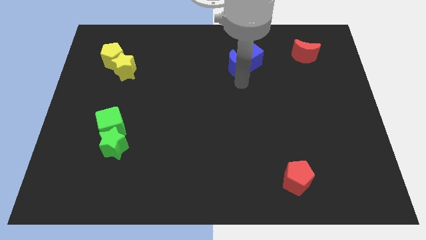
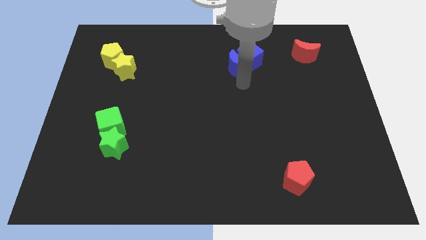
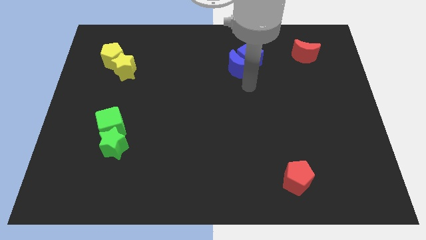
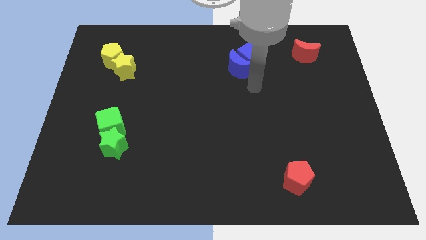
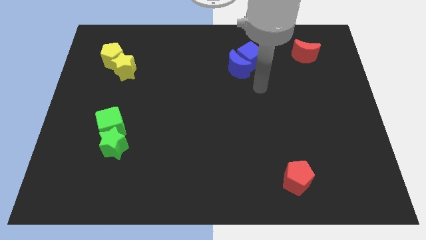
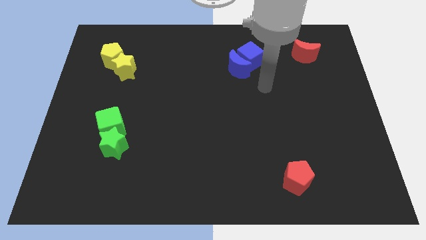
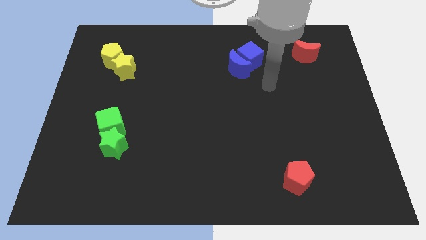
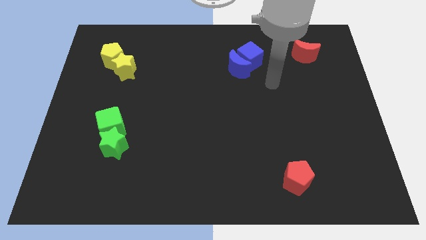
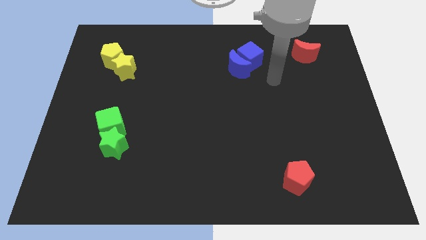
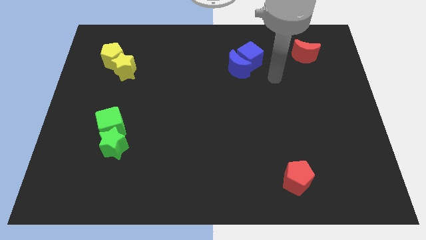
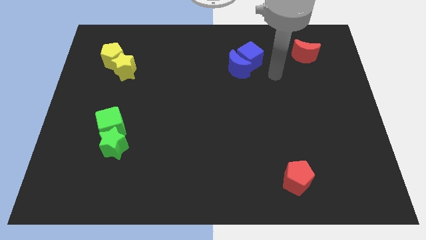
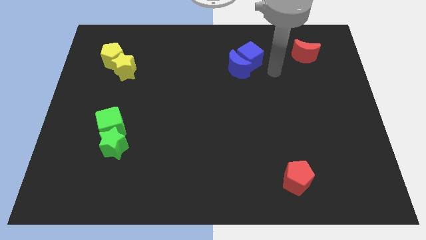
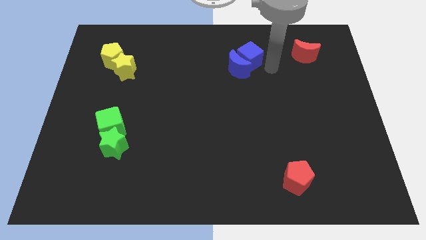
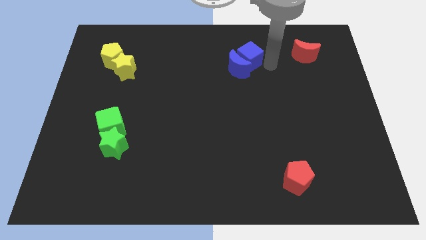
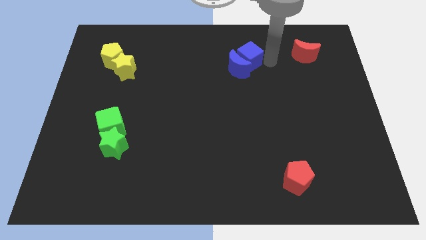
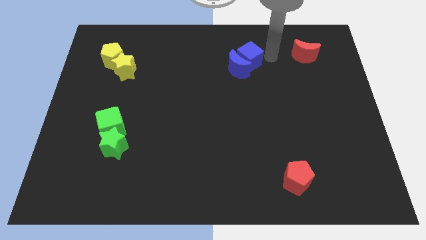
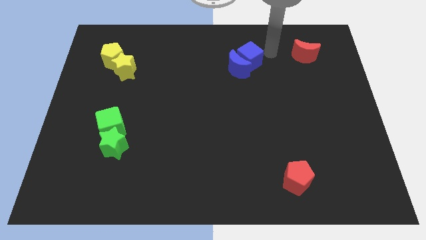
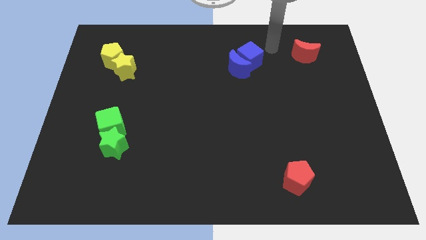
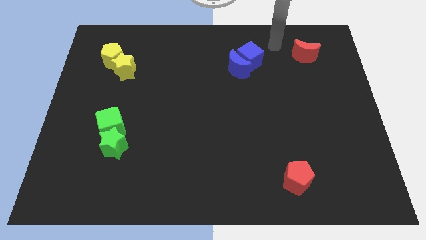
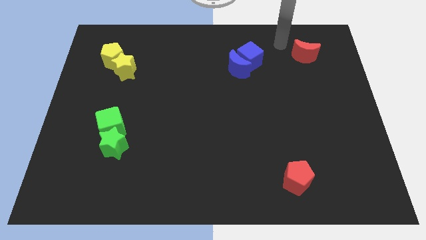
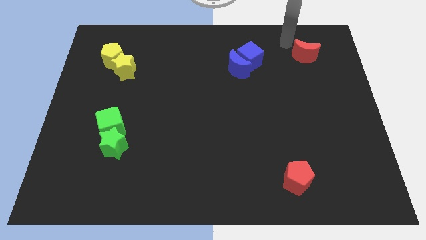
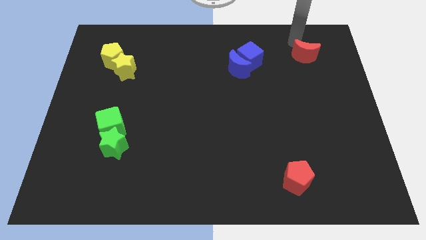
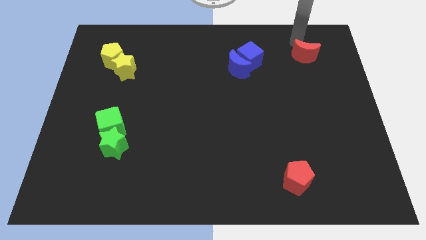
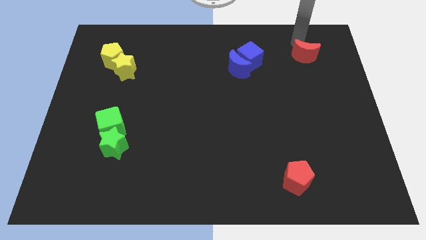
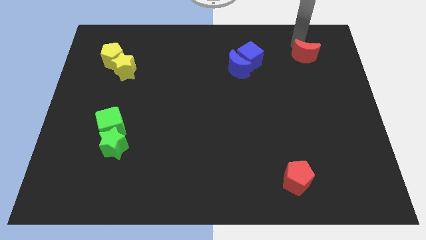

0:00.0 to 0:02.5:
place the arm above the red moon

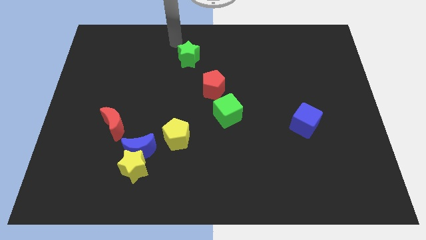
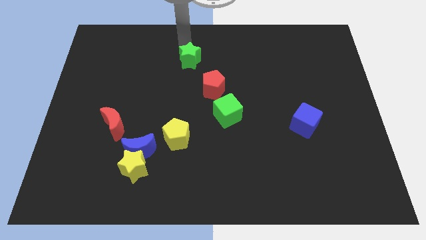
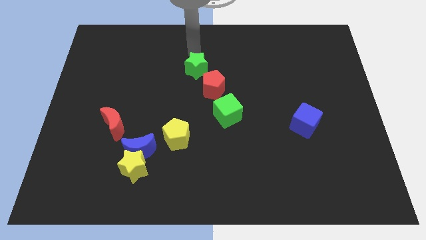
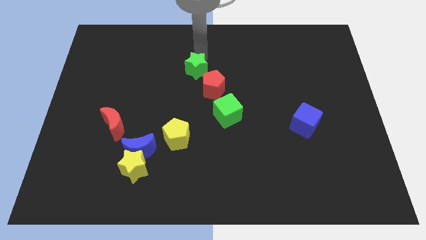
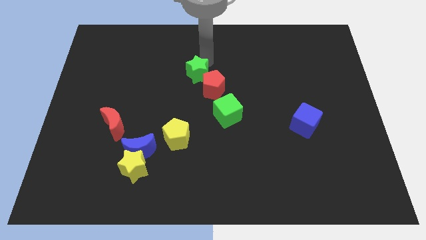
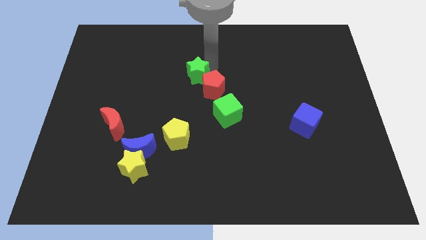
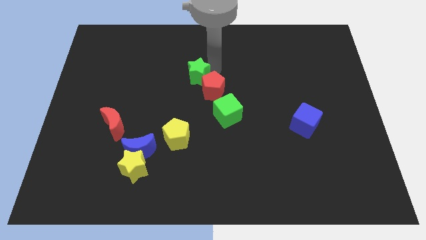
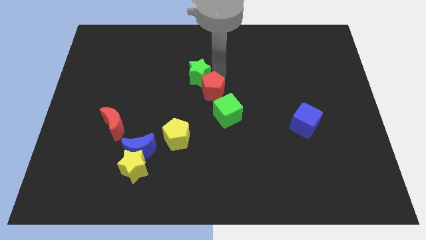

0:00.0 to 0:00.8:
place the green star to the top of red pentagon

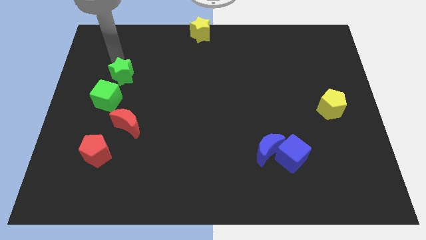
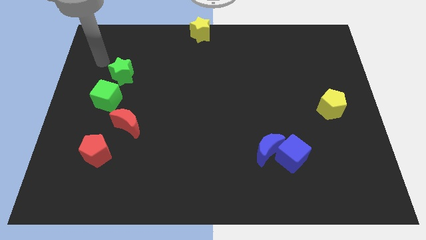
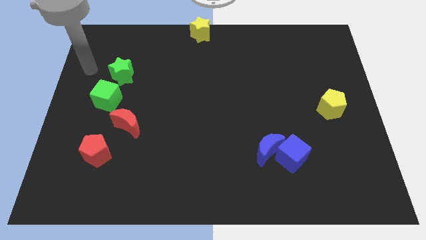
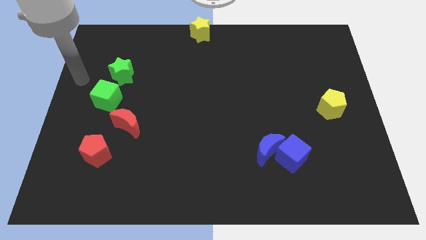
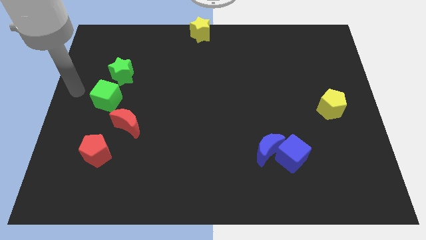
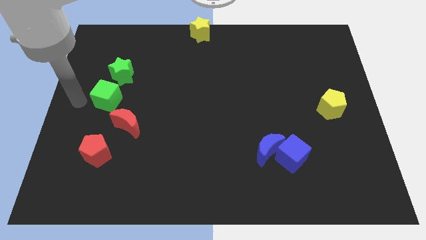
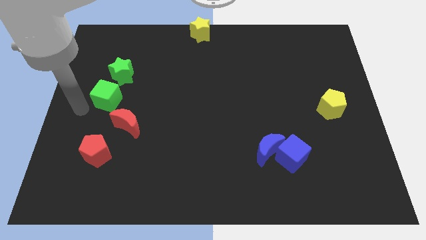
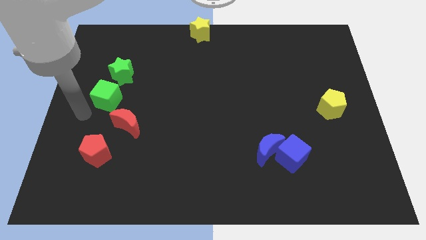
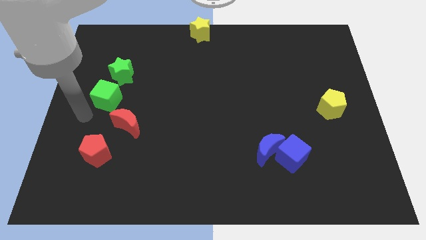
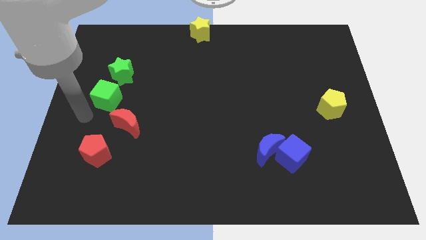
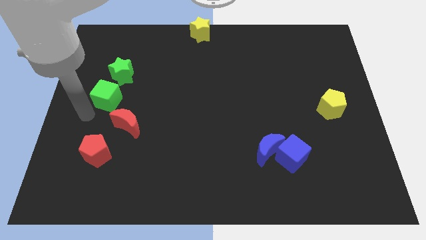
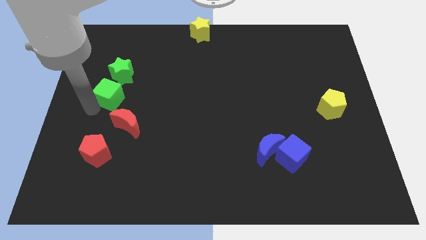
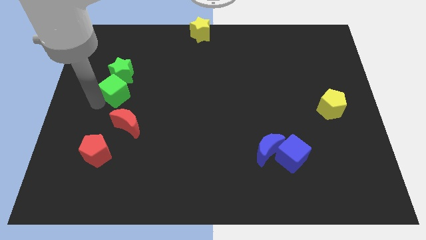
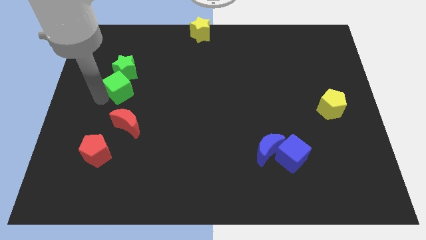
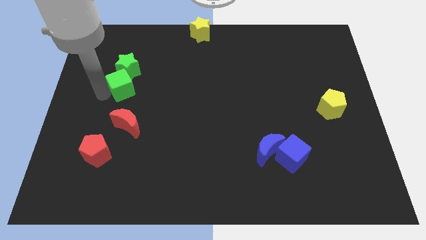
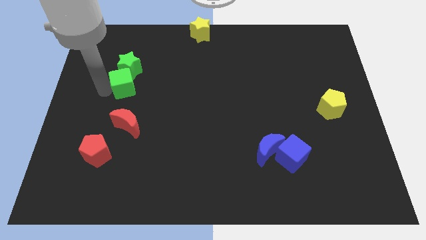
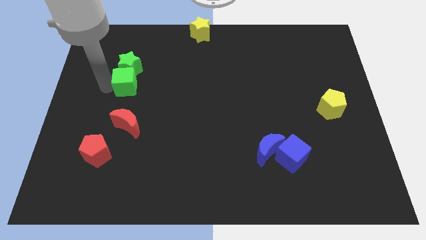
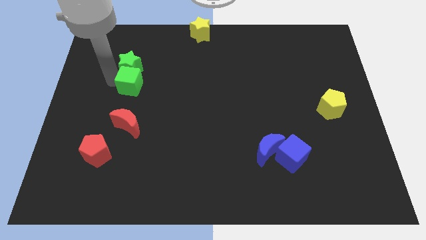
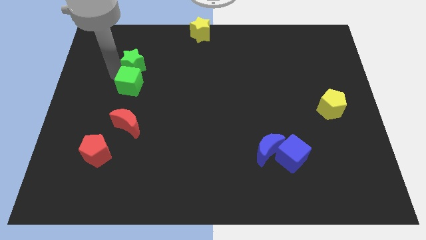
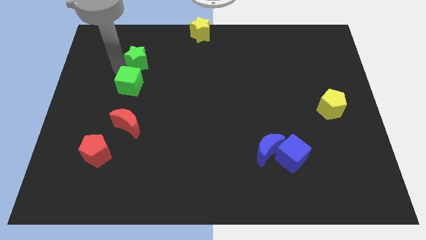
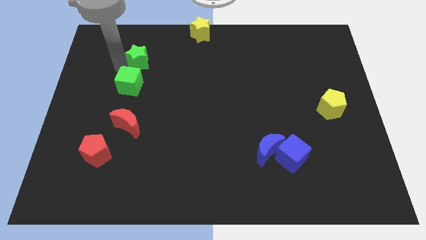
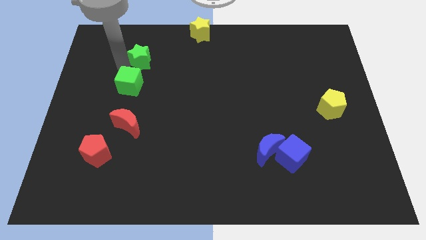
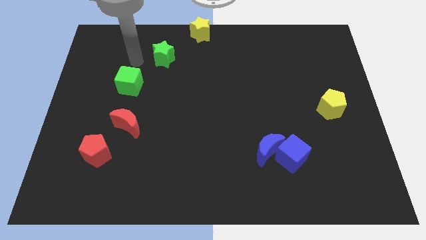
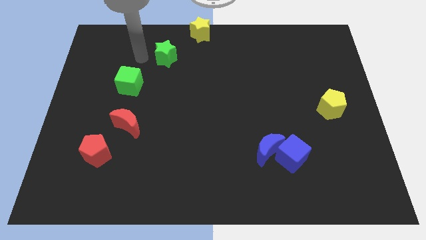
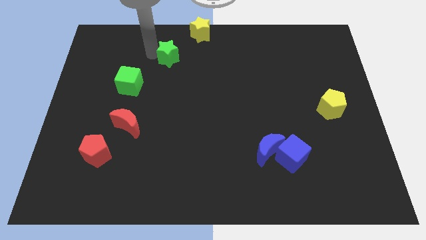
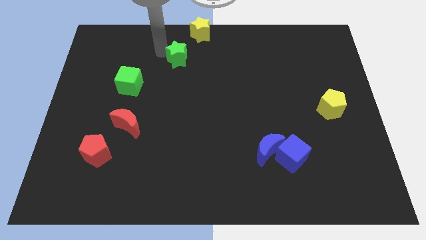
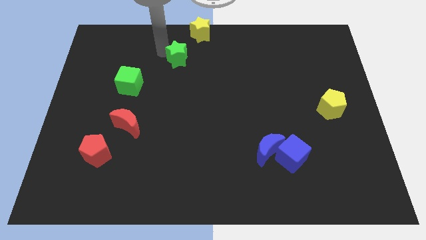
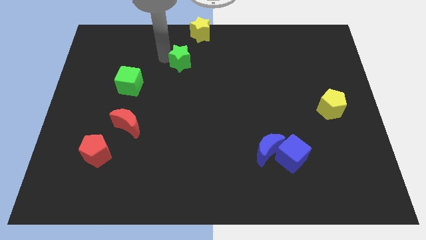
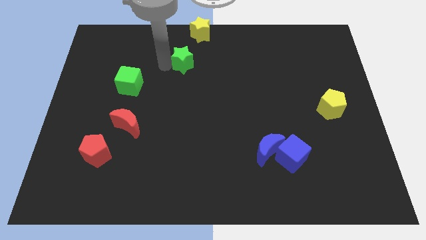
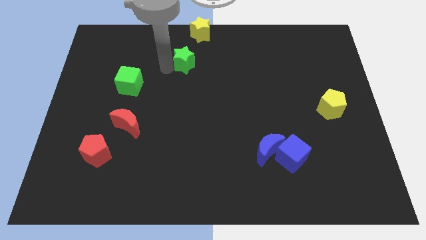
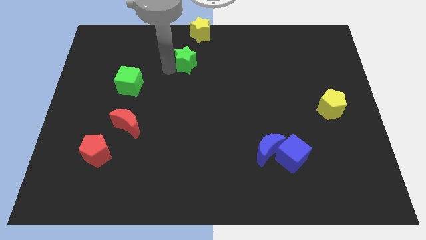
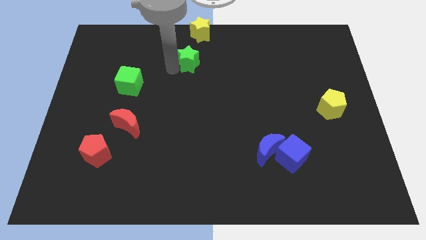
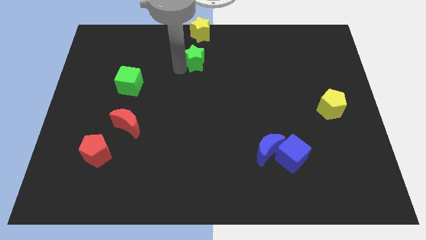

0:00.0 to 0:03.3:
push the green star under the yellow star

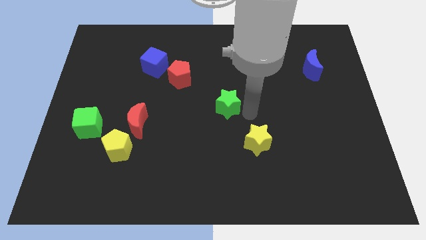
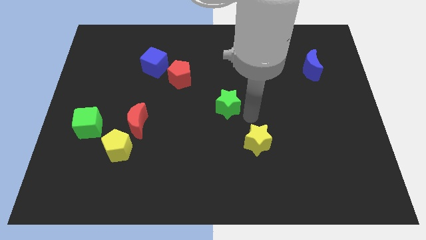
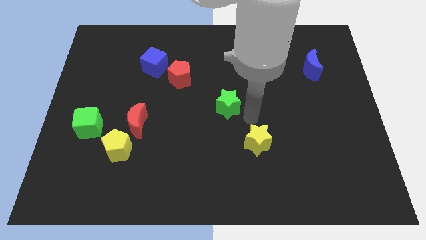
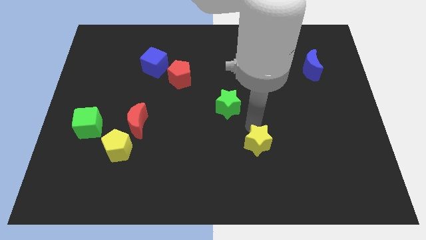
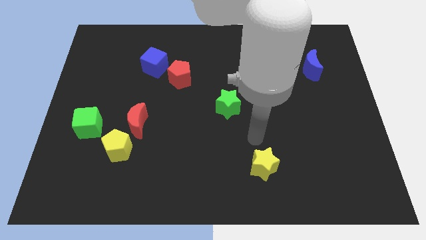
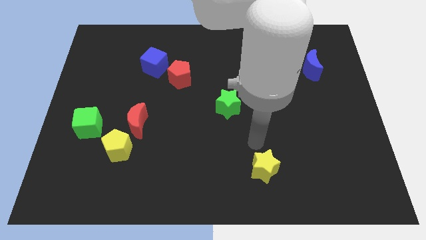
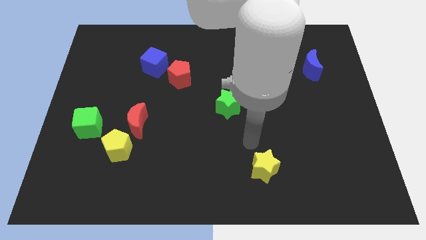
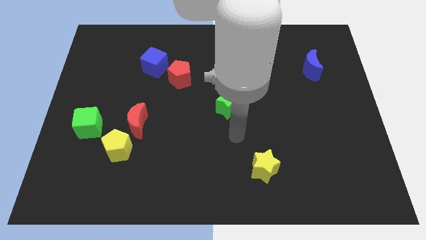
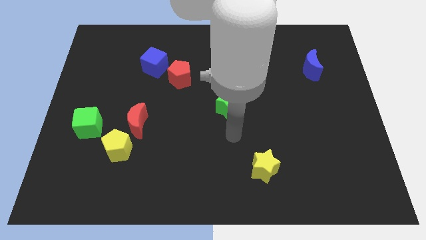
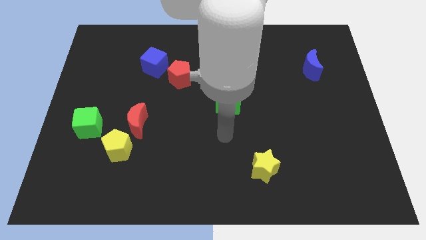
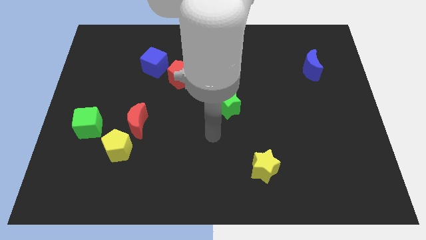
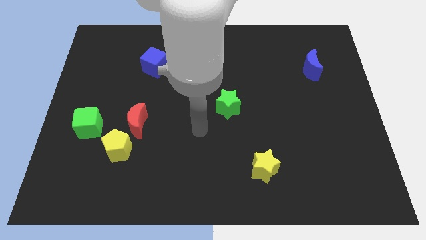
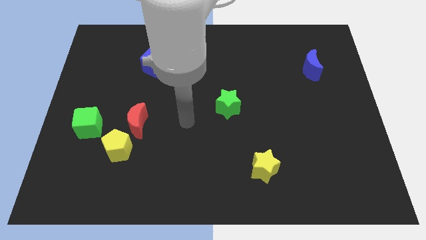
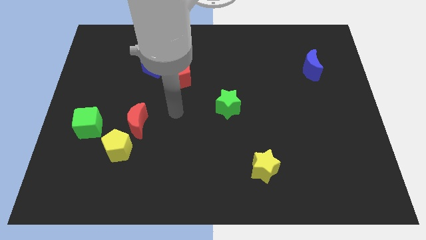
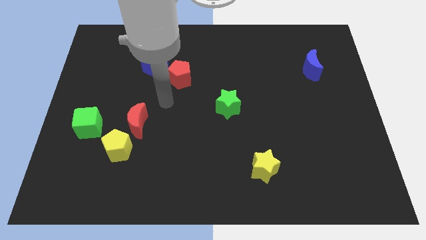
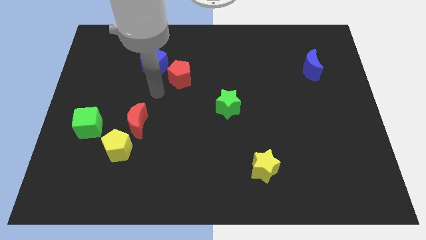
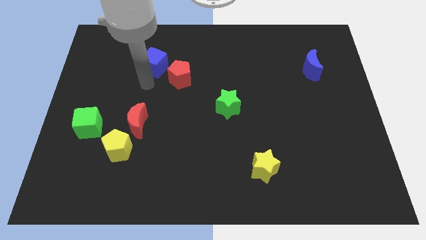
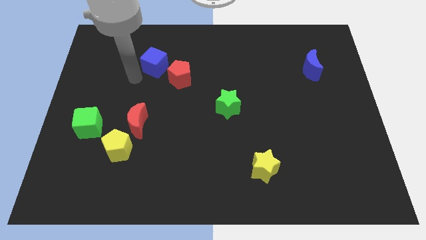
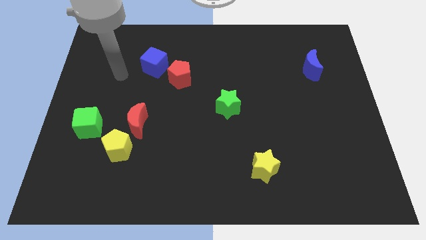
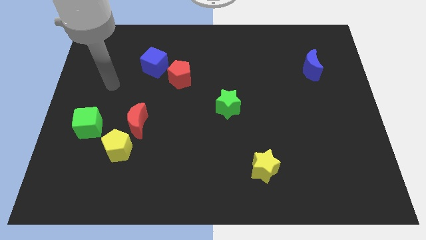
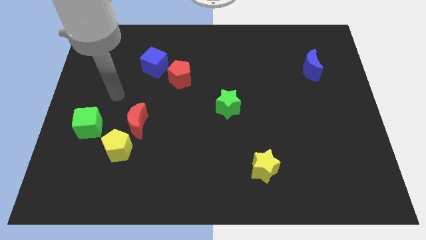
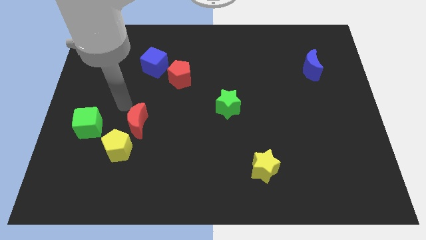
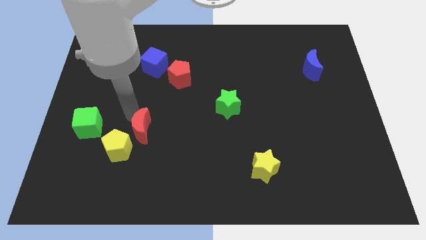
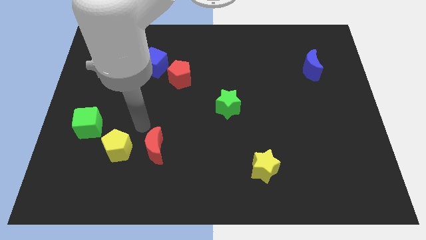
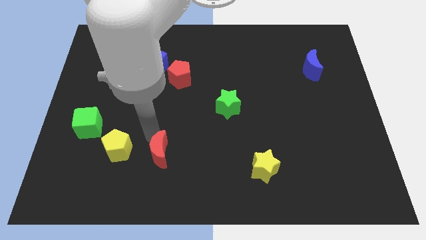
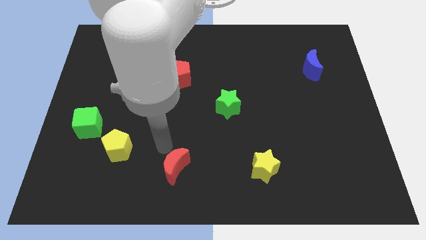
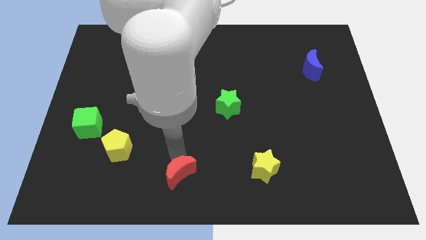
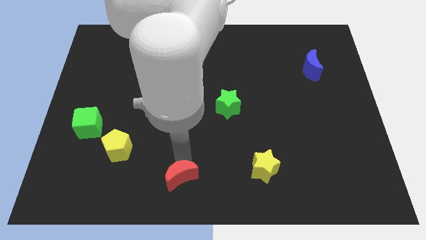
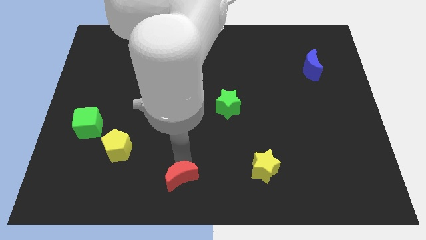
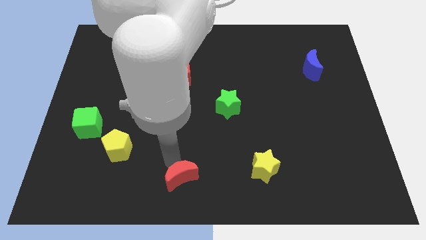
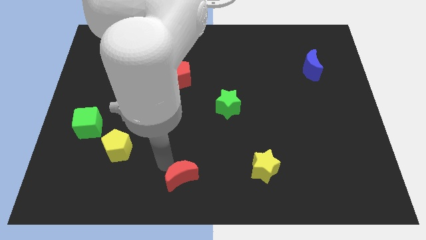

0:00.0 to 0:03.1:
push the yellow star and red moon to bottom center
